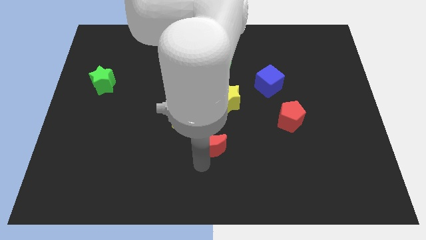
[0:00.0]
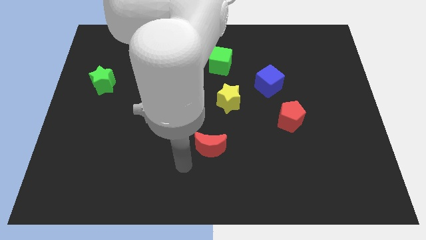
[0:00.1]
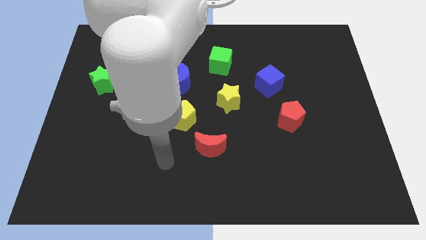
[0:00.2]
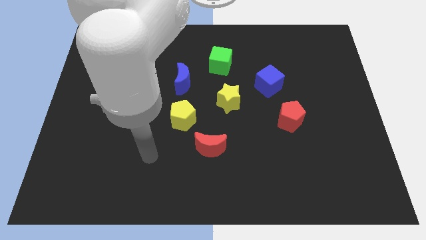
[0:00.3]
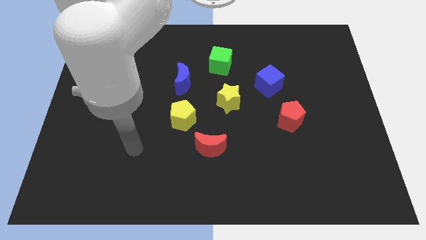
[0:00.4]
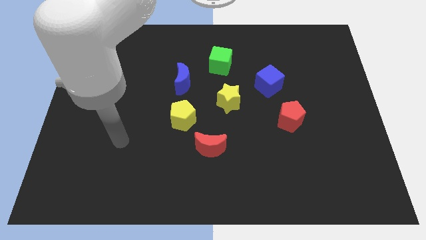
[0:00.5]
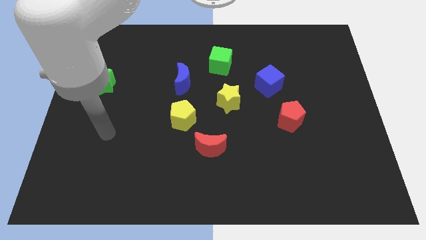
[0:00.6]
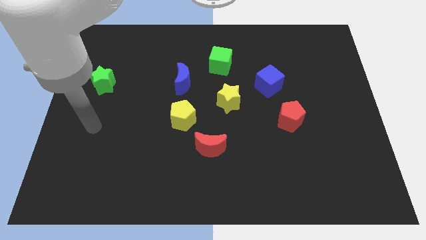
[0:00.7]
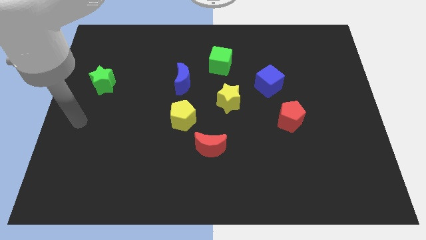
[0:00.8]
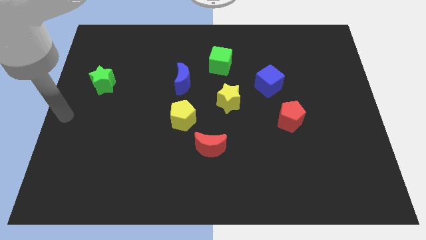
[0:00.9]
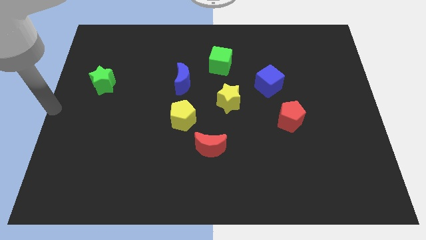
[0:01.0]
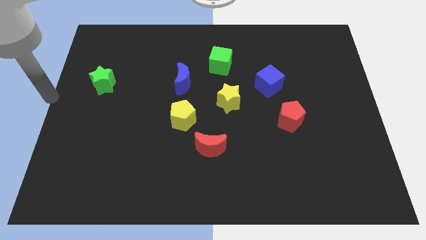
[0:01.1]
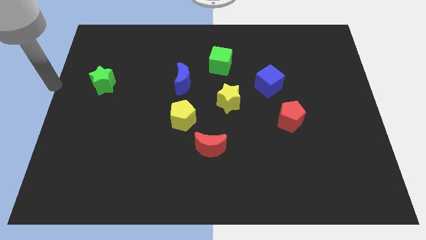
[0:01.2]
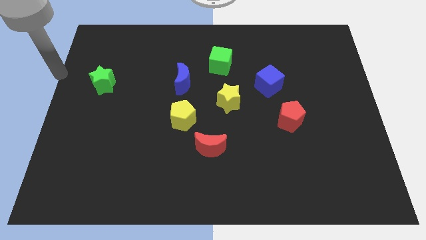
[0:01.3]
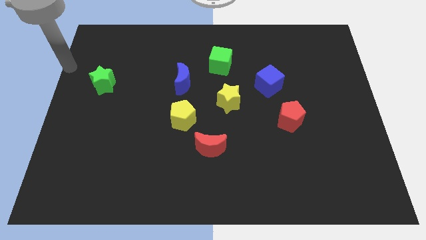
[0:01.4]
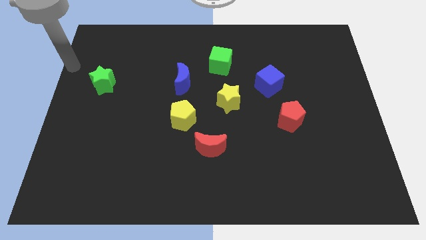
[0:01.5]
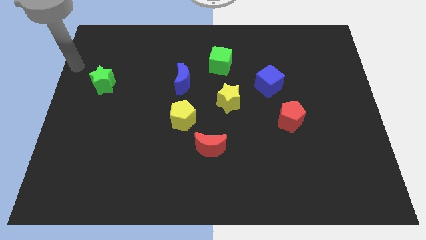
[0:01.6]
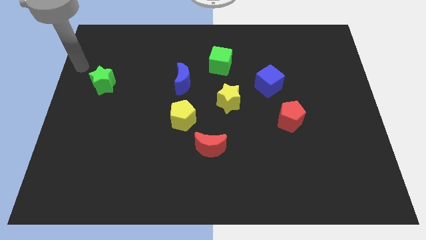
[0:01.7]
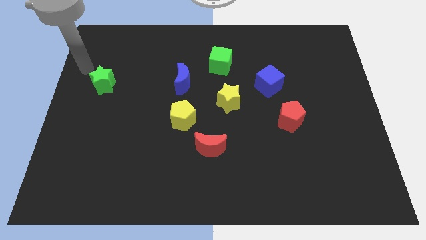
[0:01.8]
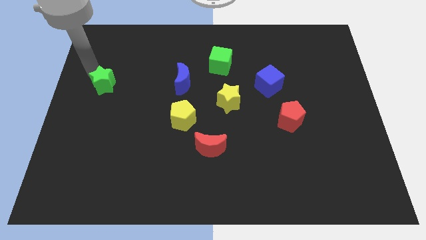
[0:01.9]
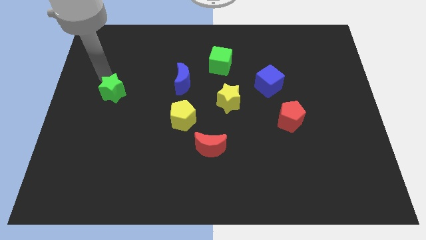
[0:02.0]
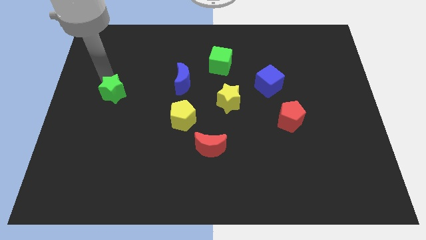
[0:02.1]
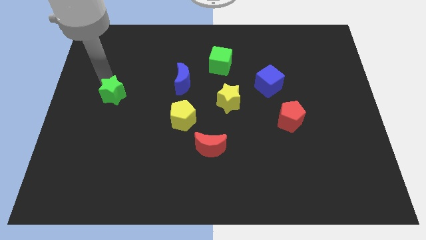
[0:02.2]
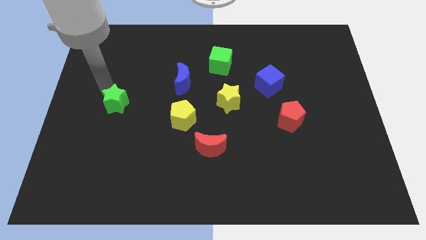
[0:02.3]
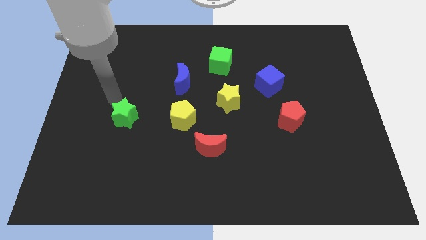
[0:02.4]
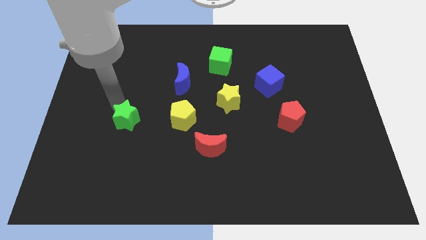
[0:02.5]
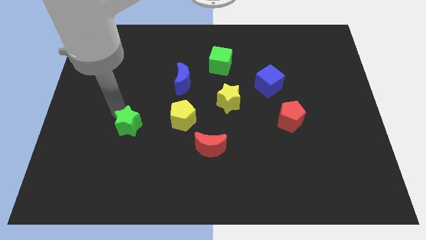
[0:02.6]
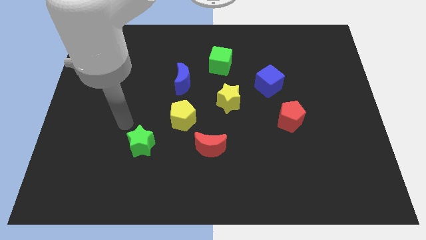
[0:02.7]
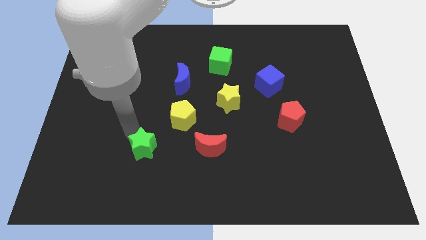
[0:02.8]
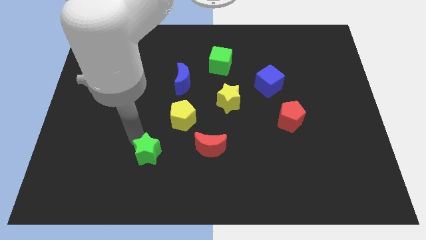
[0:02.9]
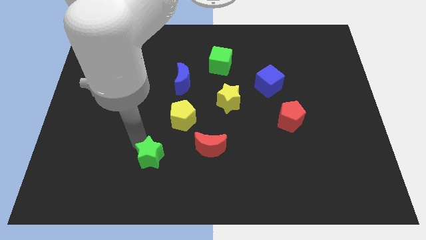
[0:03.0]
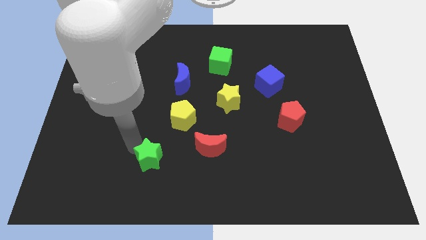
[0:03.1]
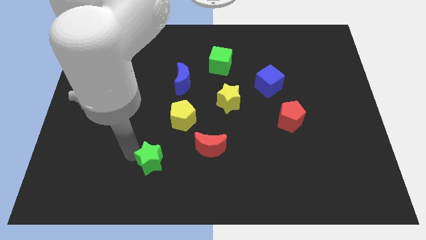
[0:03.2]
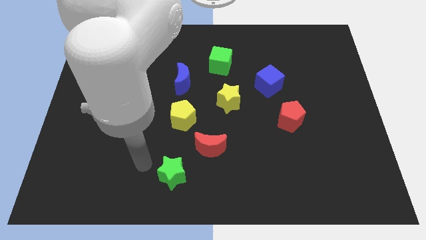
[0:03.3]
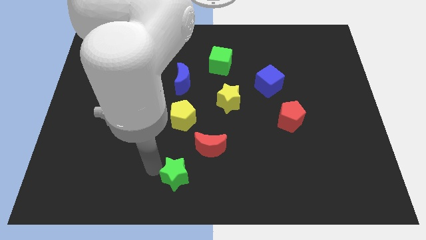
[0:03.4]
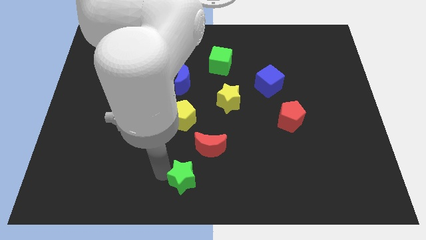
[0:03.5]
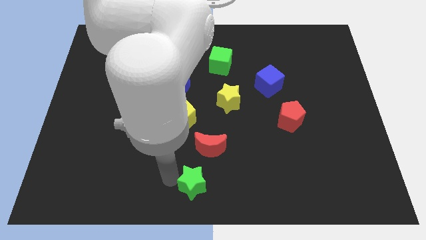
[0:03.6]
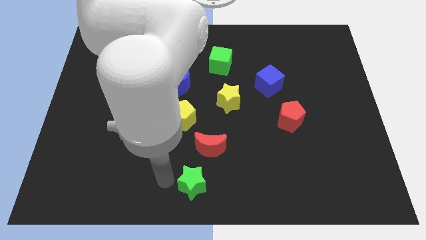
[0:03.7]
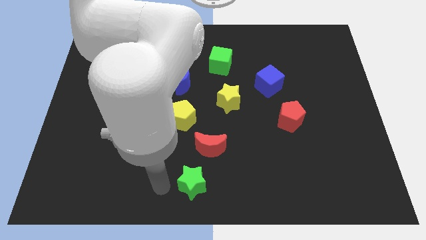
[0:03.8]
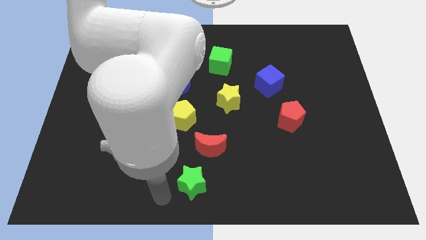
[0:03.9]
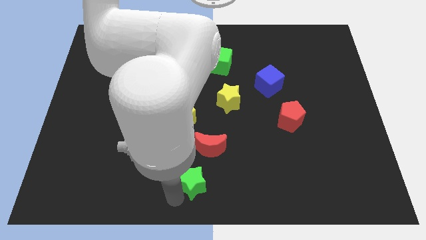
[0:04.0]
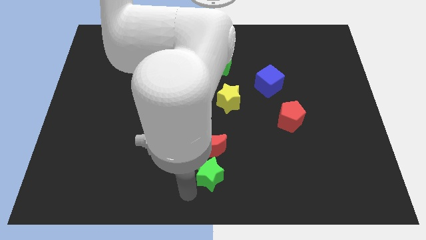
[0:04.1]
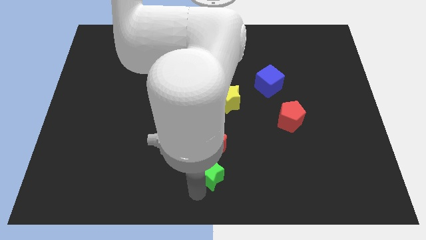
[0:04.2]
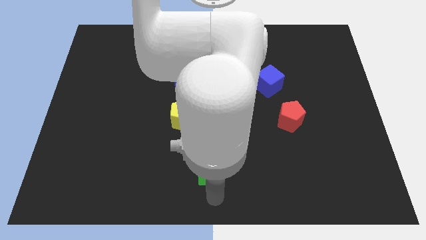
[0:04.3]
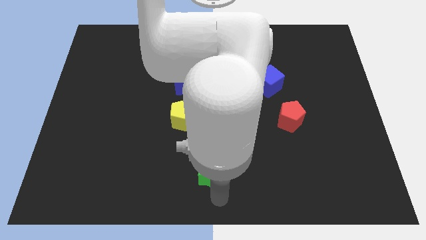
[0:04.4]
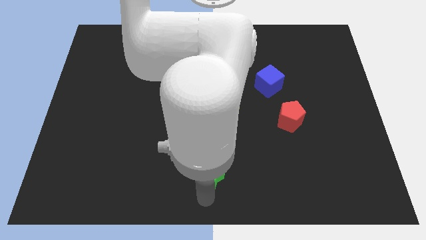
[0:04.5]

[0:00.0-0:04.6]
place the green star below the red moon

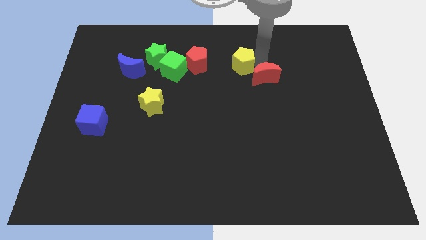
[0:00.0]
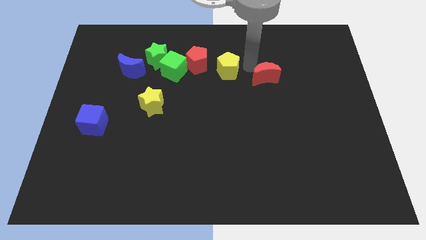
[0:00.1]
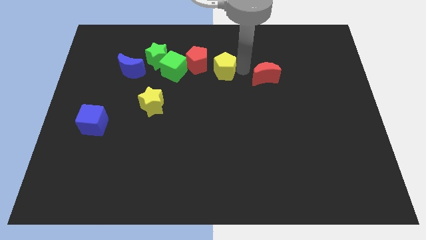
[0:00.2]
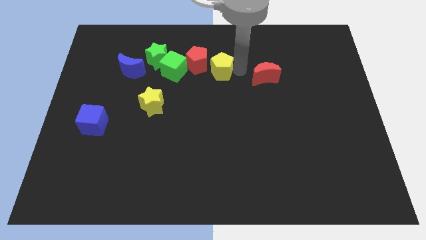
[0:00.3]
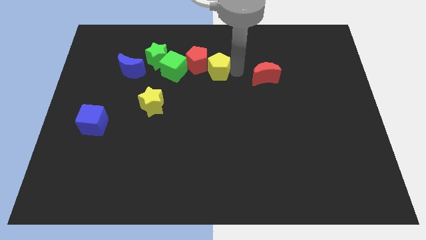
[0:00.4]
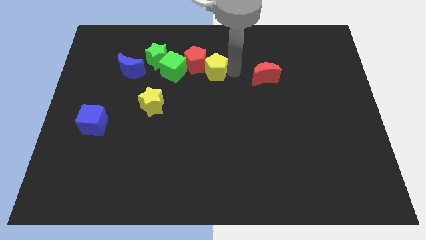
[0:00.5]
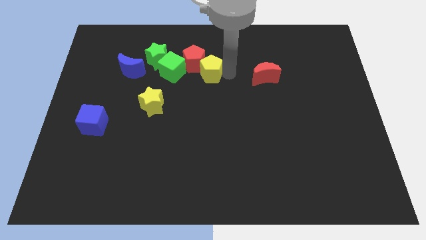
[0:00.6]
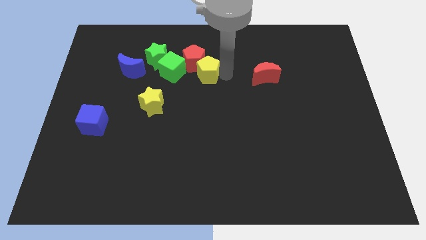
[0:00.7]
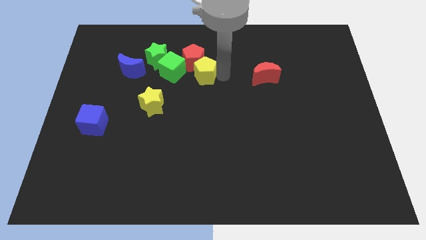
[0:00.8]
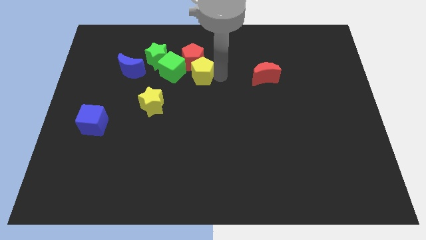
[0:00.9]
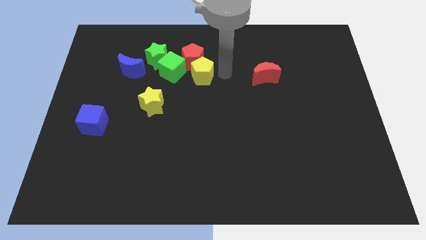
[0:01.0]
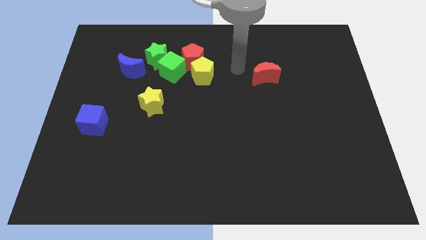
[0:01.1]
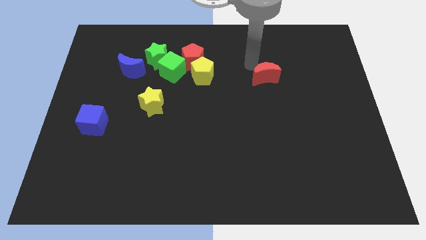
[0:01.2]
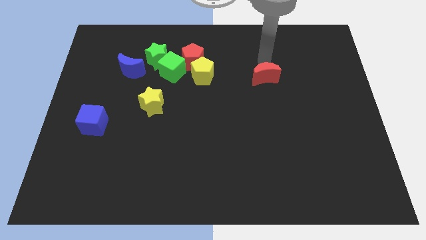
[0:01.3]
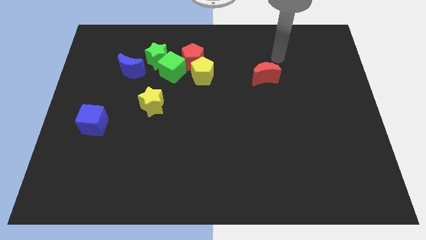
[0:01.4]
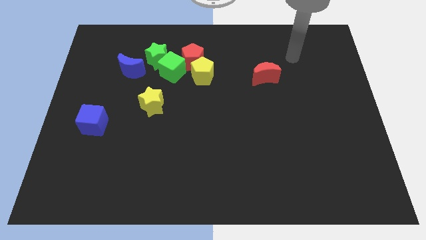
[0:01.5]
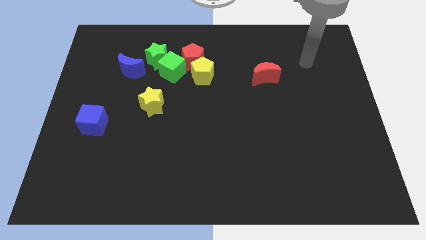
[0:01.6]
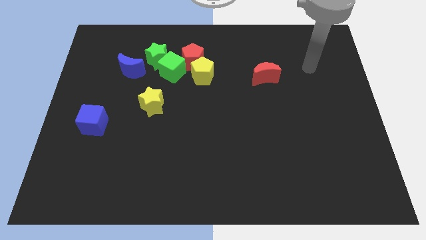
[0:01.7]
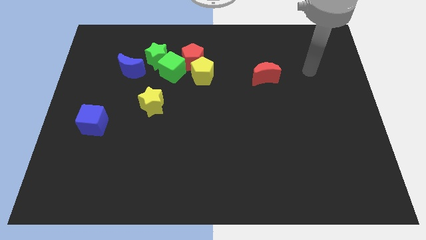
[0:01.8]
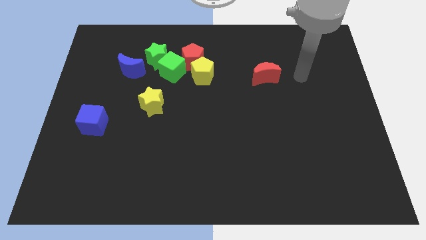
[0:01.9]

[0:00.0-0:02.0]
push the yellow pentagon into the red pentagon

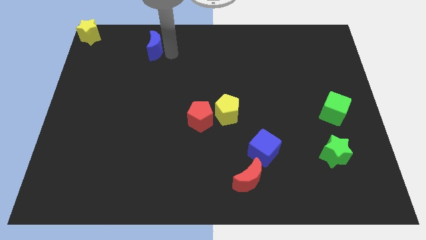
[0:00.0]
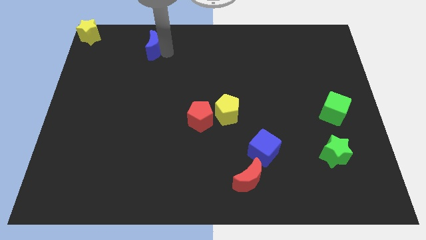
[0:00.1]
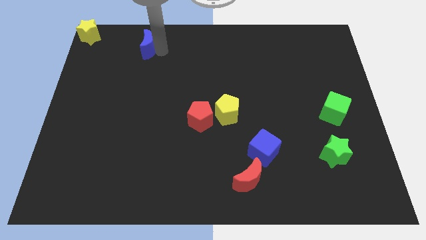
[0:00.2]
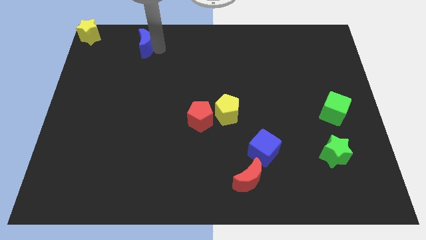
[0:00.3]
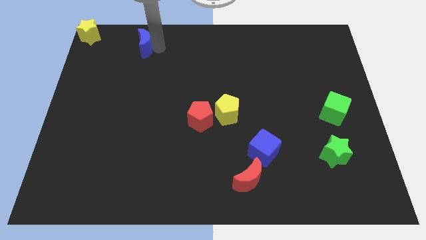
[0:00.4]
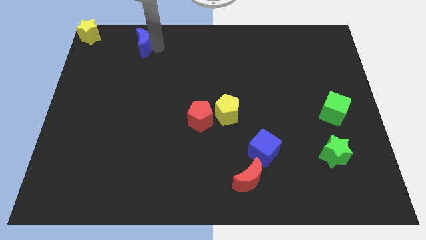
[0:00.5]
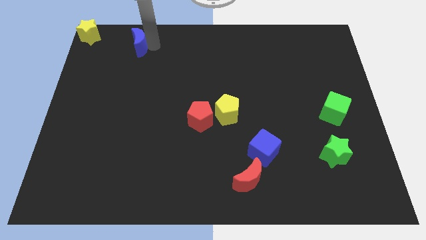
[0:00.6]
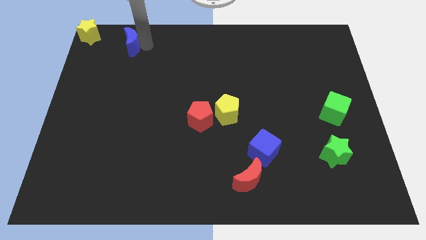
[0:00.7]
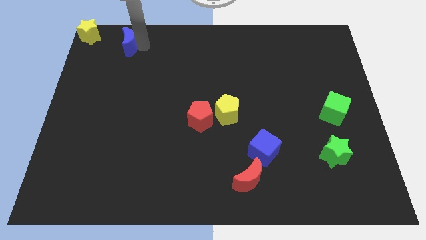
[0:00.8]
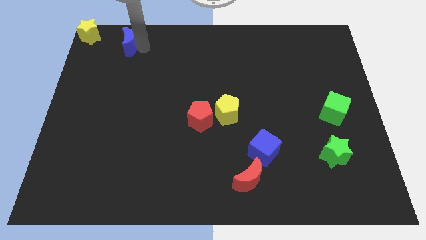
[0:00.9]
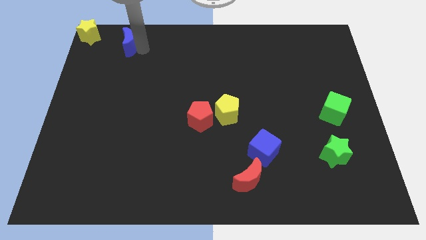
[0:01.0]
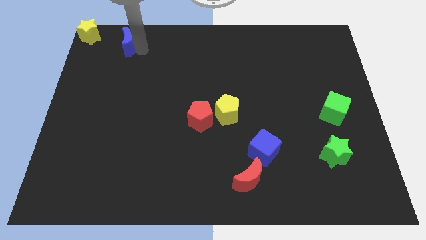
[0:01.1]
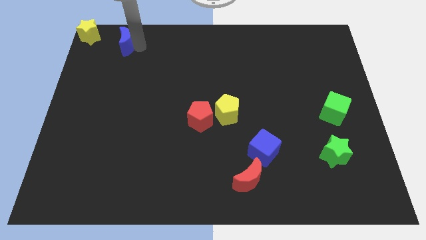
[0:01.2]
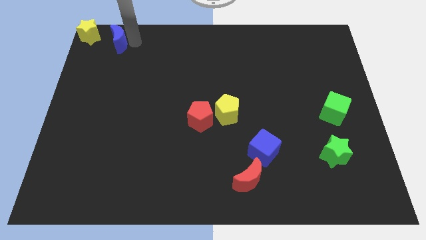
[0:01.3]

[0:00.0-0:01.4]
move the blue moon diagonally to thhe red pentagon

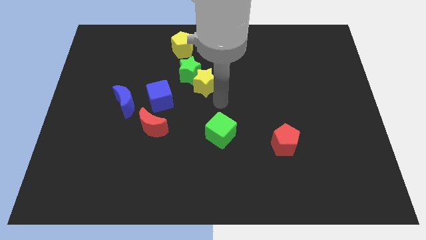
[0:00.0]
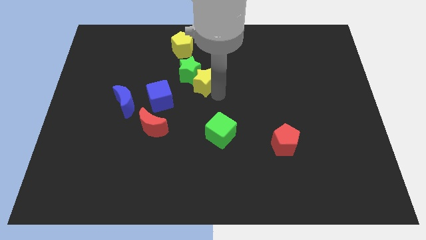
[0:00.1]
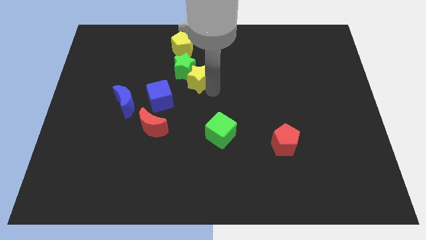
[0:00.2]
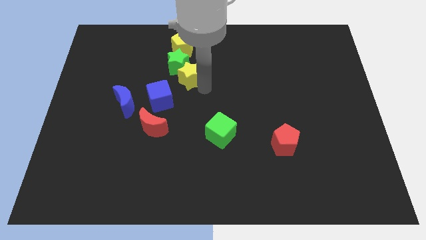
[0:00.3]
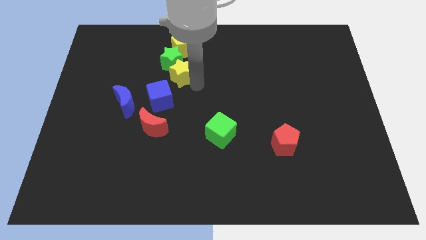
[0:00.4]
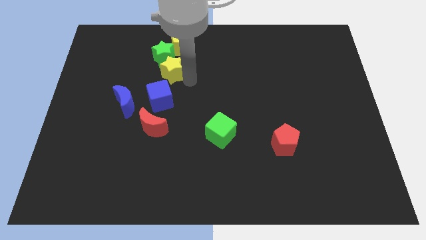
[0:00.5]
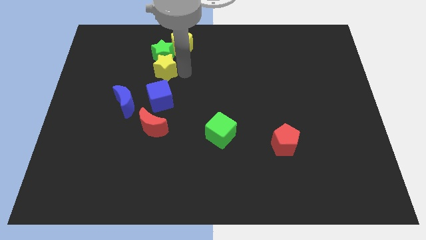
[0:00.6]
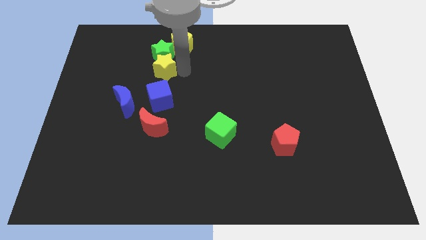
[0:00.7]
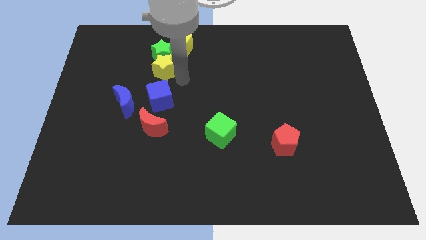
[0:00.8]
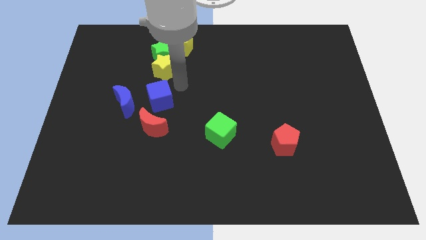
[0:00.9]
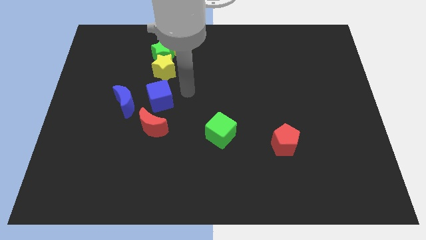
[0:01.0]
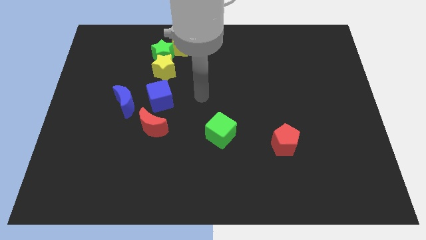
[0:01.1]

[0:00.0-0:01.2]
push the yellow star and the green star towards top

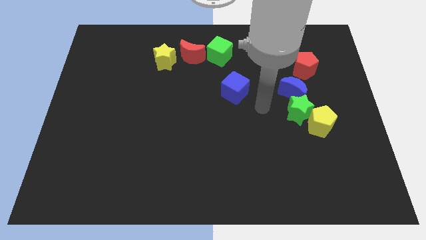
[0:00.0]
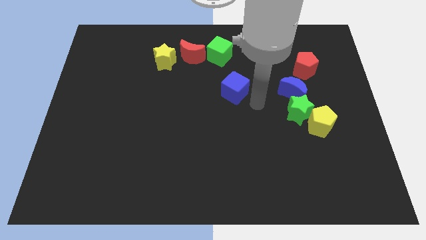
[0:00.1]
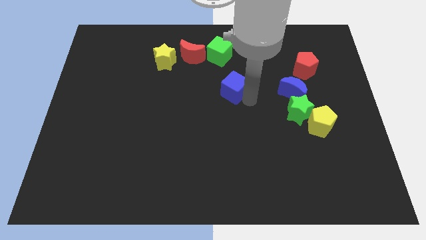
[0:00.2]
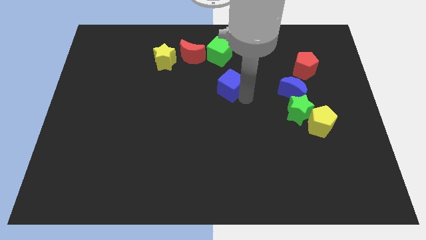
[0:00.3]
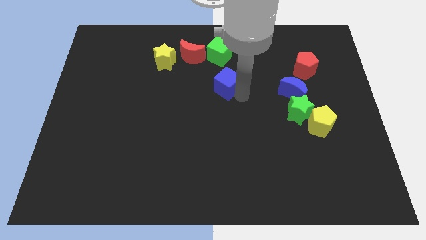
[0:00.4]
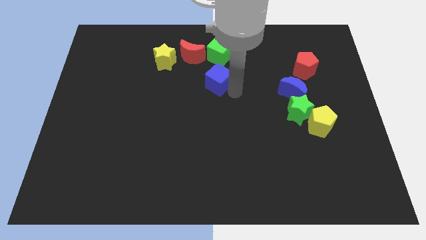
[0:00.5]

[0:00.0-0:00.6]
place the blue cube to the bottom of the green cube
